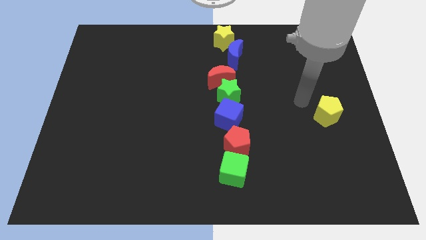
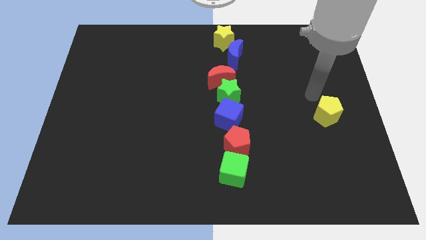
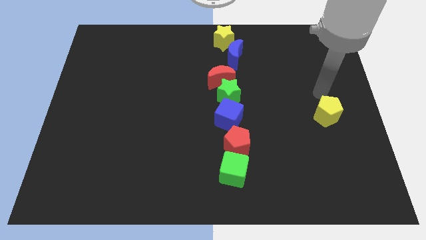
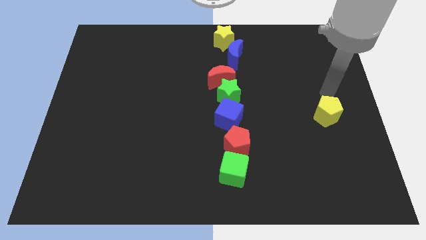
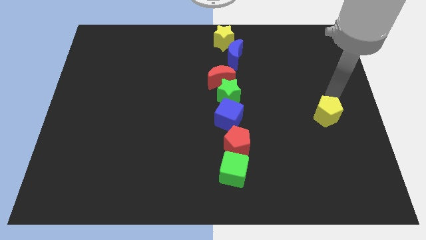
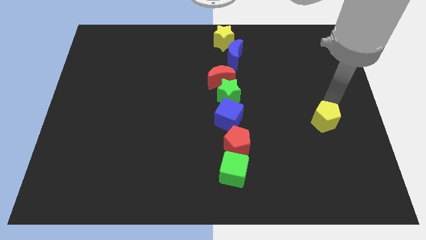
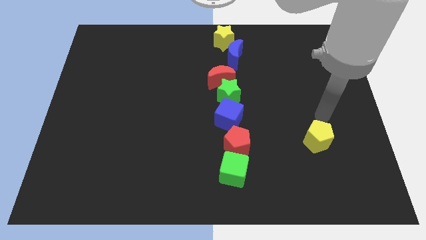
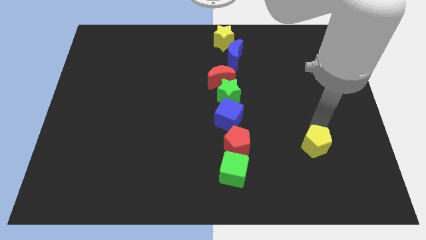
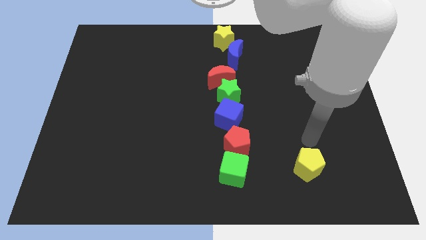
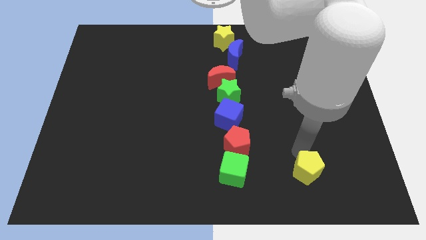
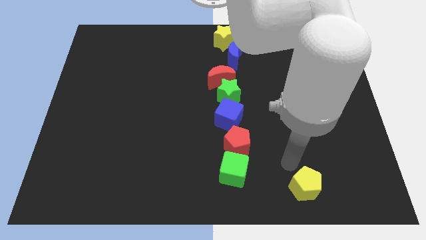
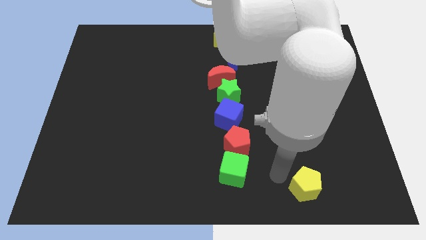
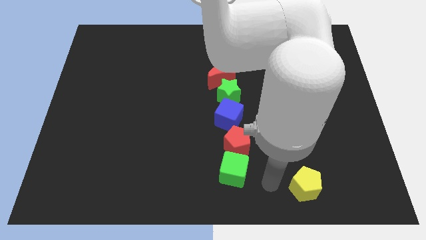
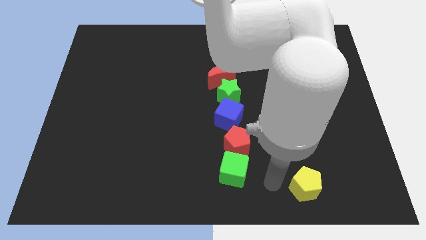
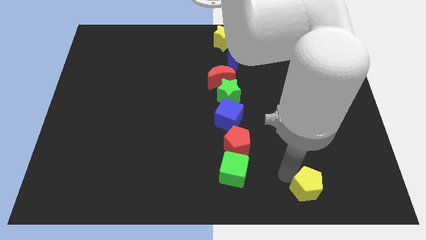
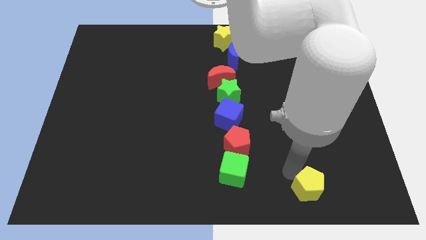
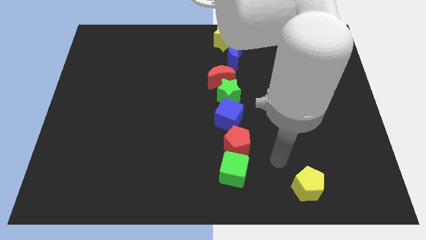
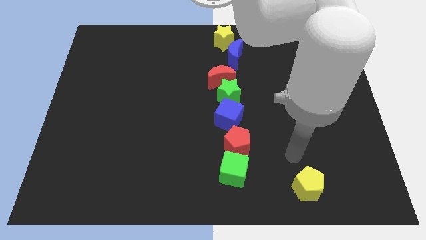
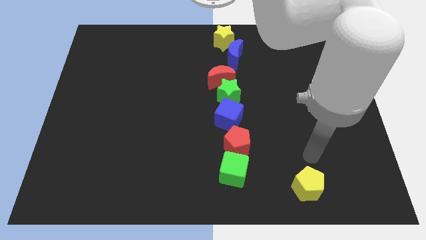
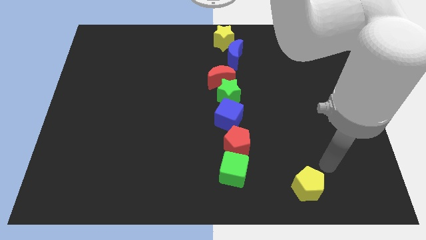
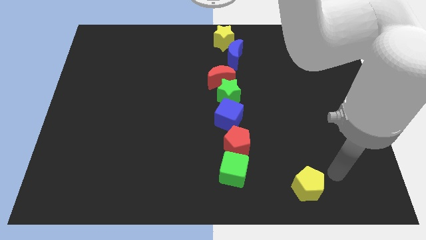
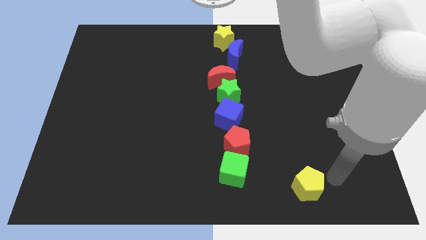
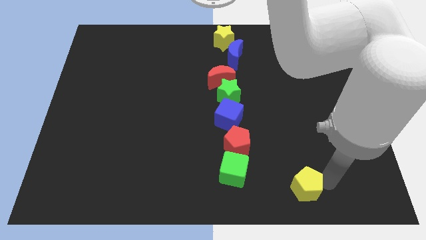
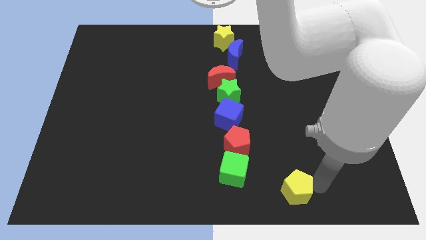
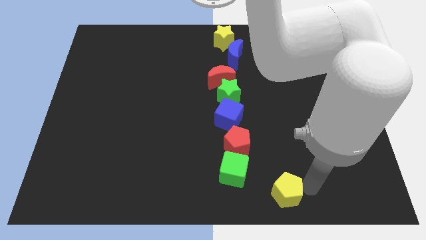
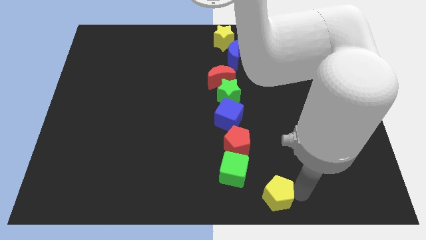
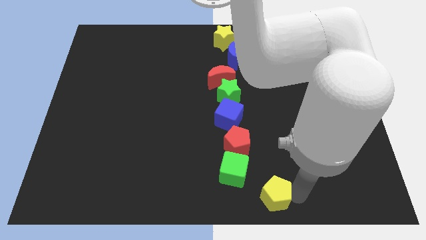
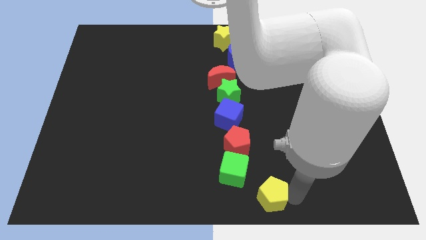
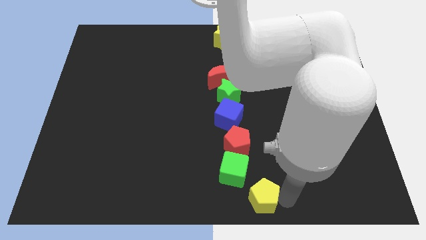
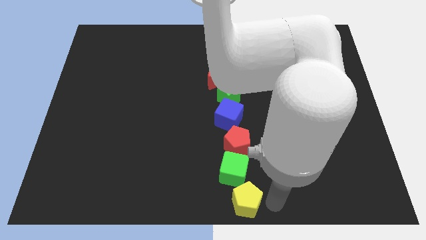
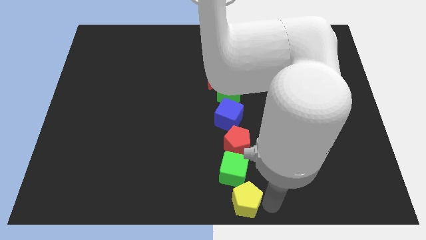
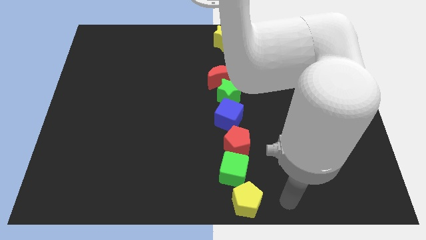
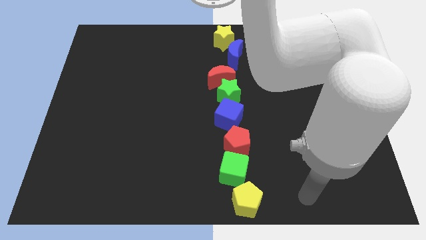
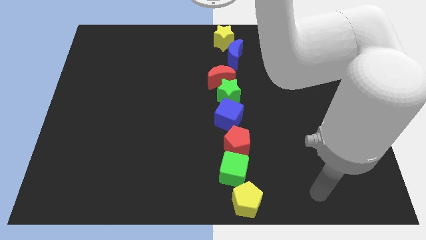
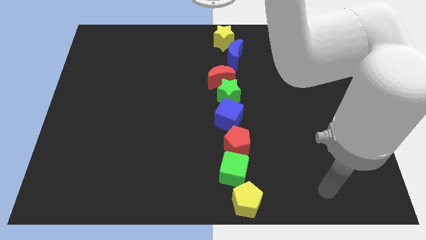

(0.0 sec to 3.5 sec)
place the yellow pentagon below green cube

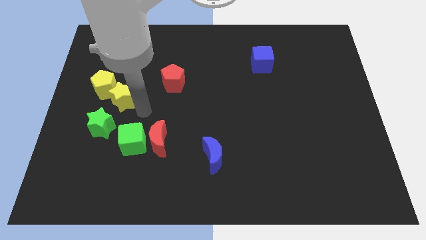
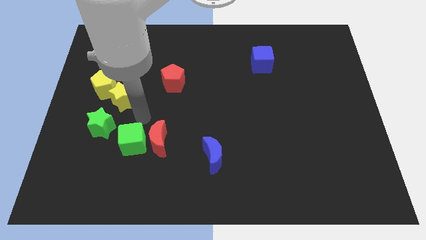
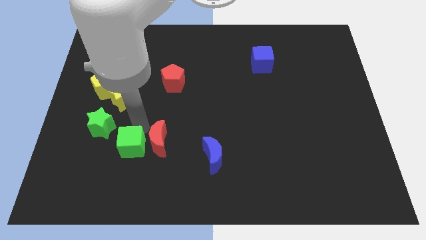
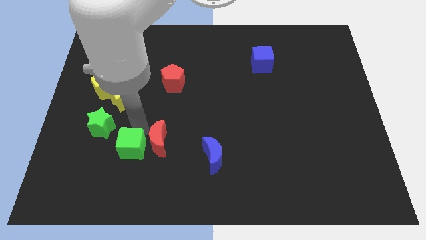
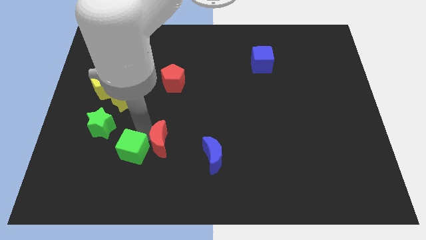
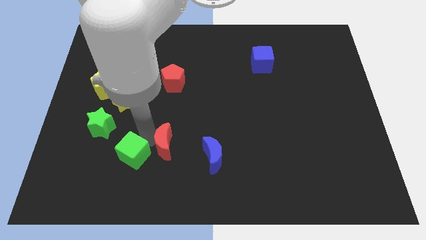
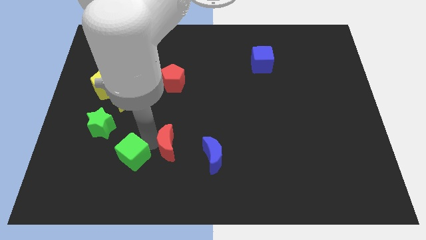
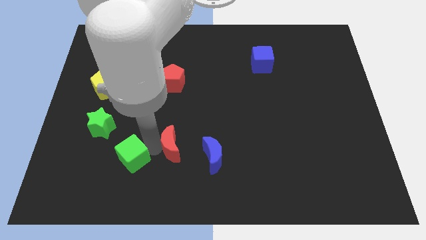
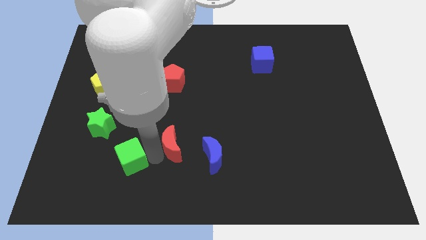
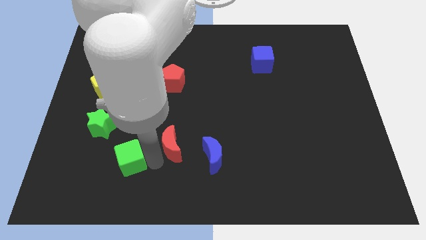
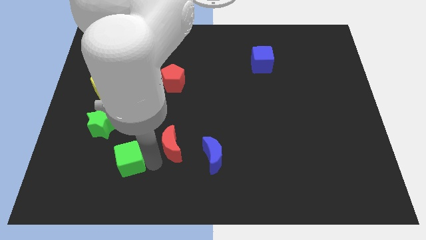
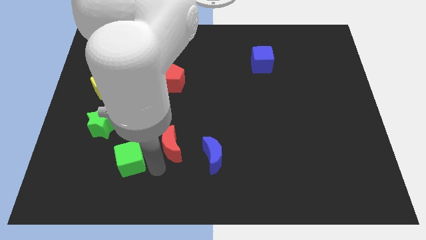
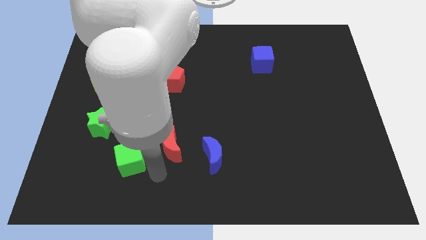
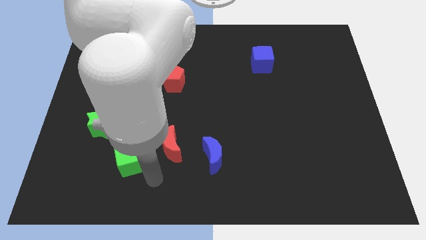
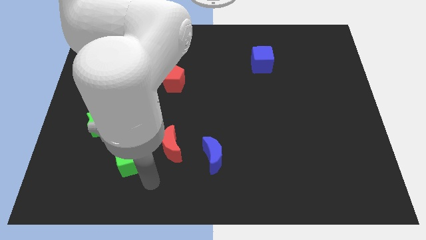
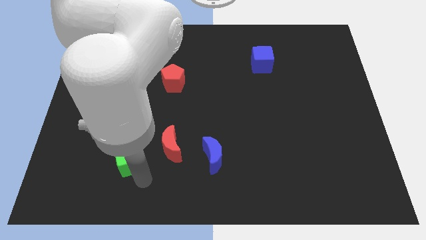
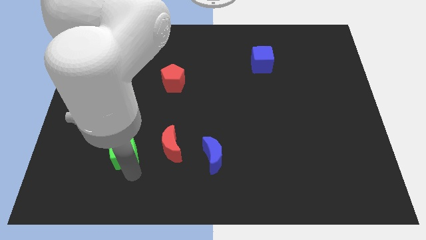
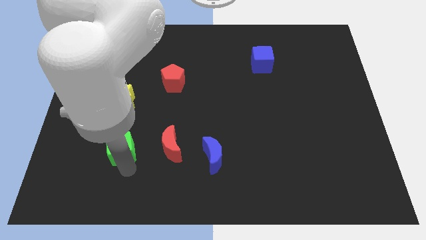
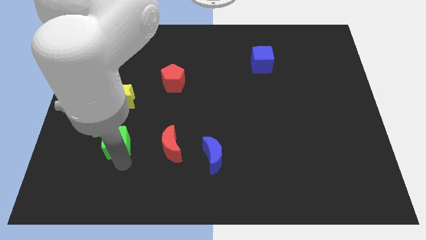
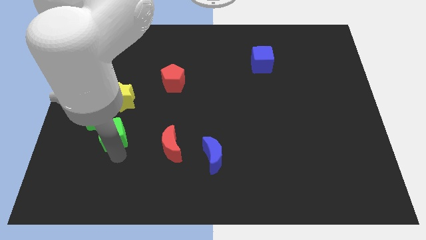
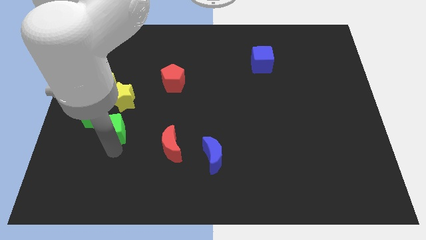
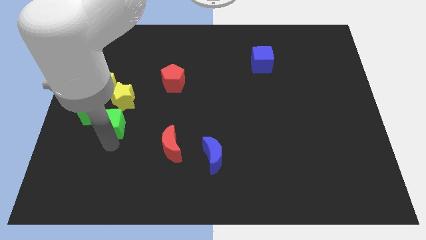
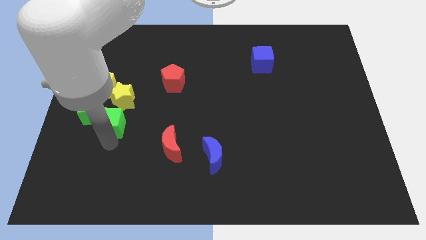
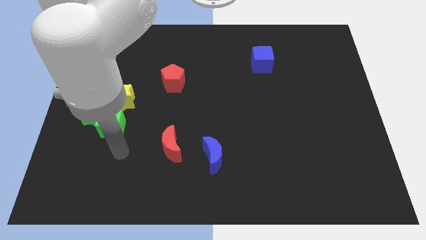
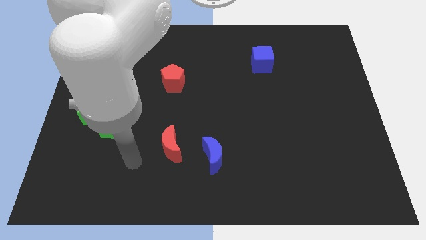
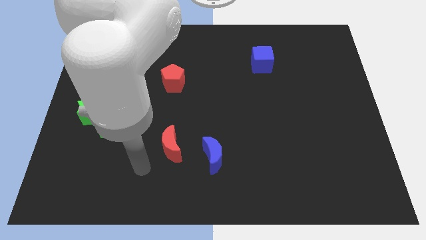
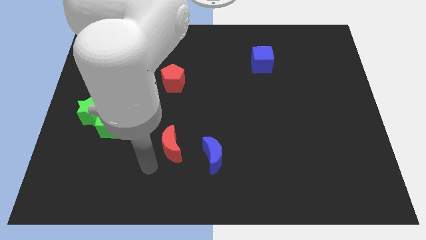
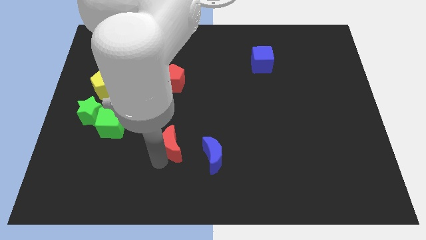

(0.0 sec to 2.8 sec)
push the green cube to the top left of the red crescent

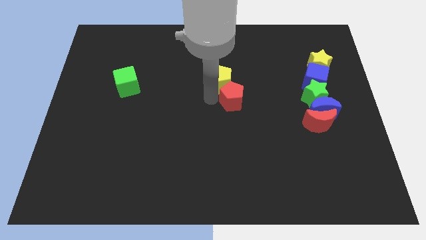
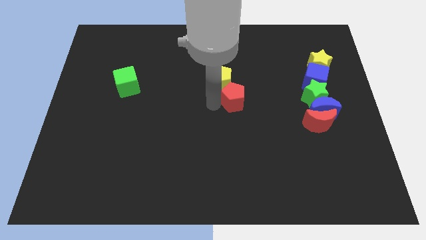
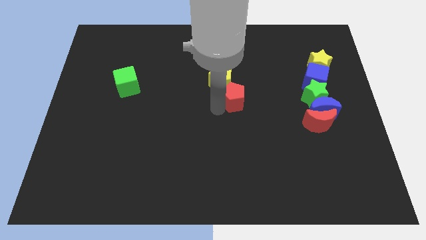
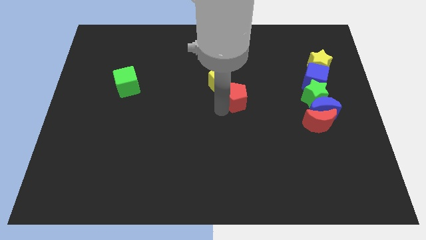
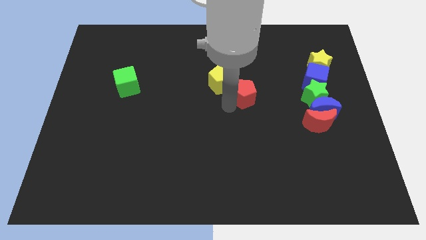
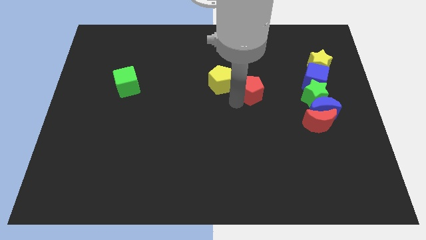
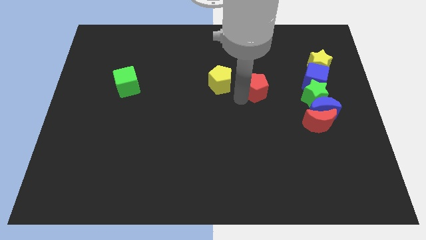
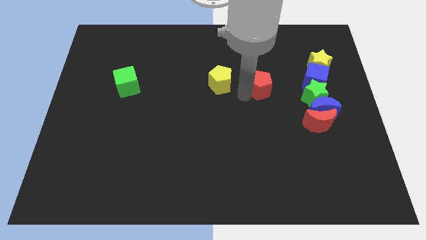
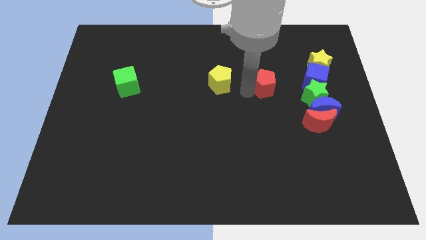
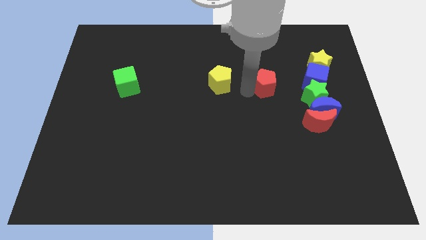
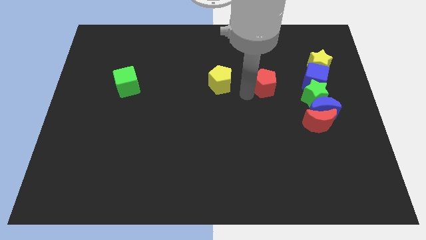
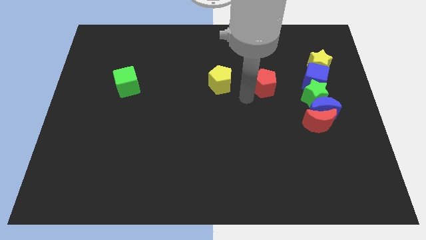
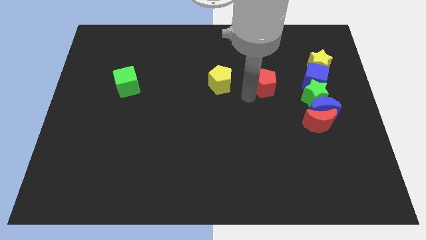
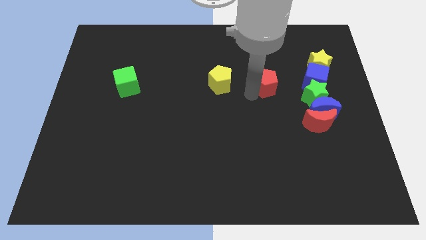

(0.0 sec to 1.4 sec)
place the red pentagon in between the blue and yellow pentagon

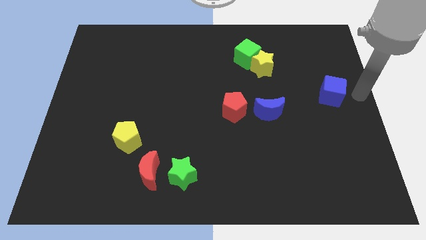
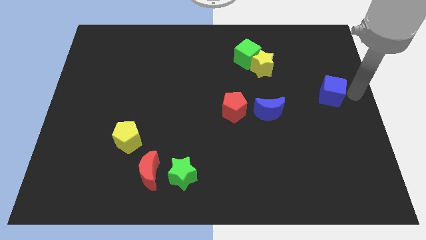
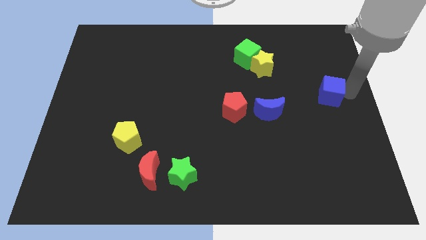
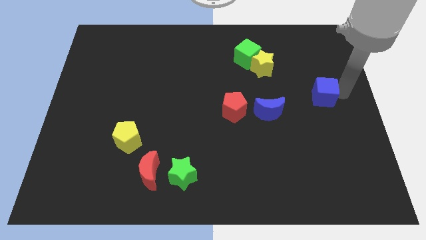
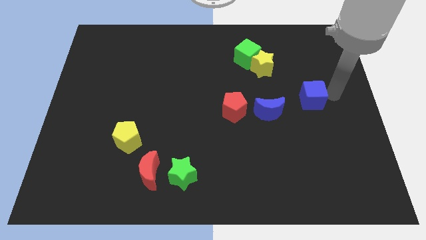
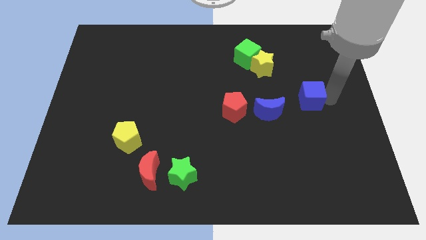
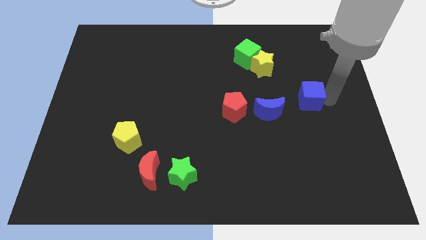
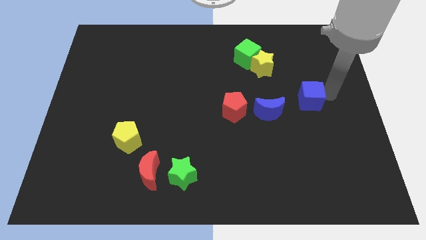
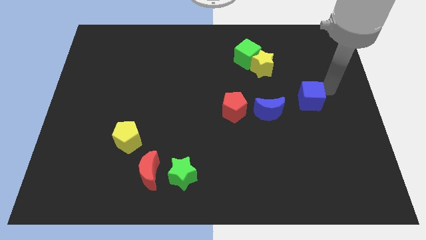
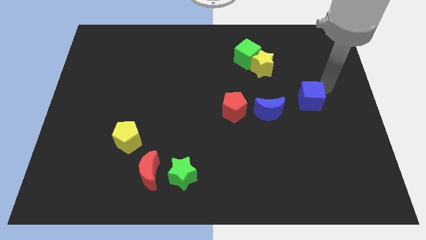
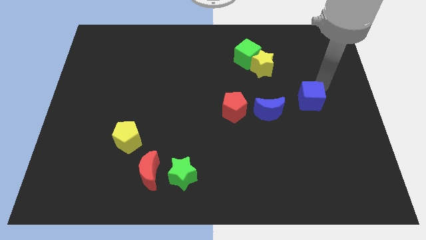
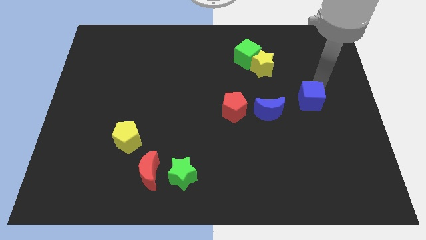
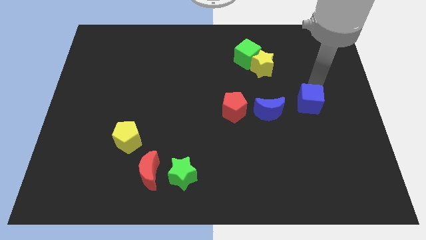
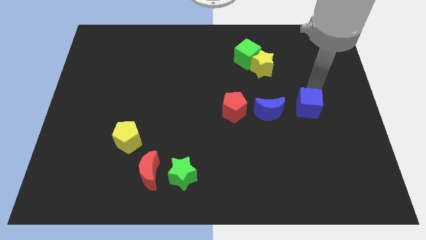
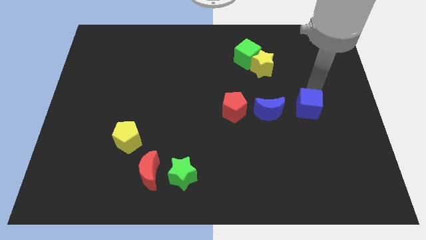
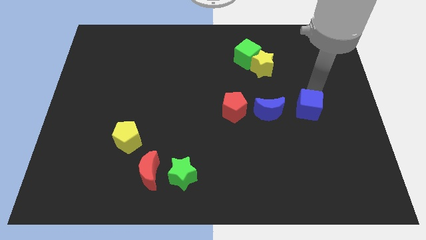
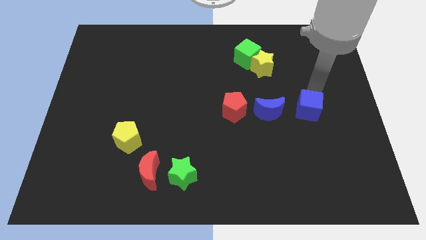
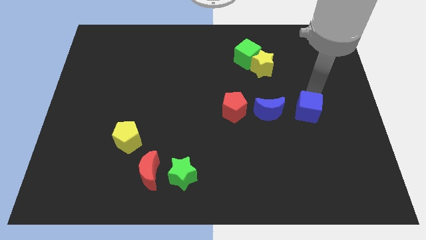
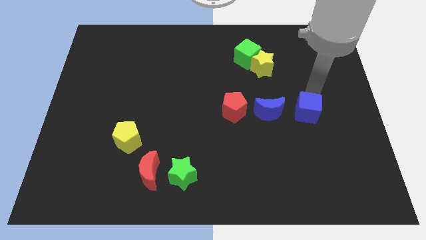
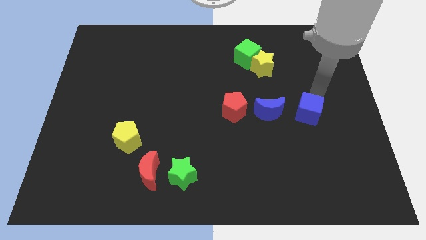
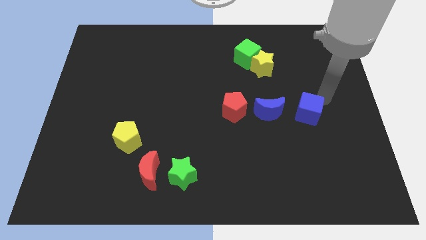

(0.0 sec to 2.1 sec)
move the blue cube to the right of the blue moon
